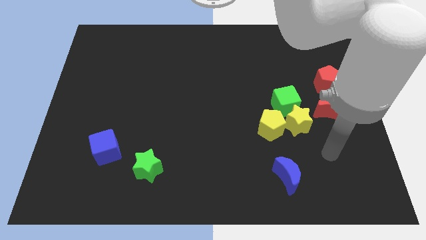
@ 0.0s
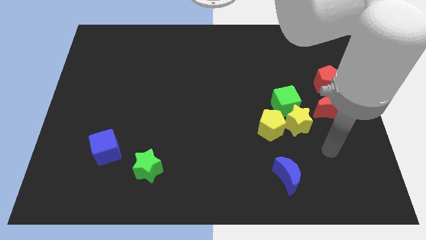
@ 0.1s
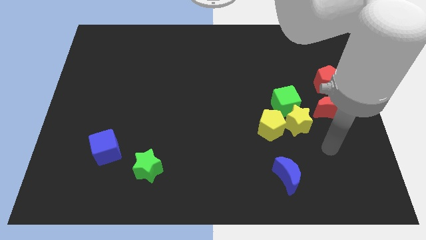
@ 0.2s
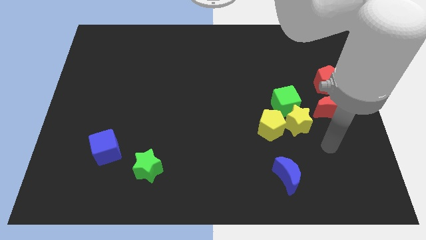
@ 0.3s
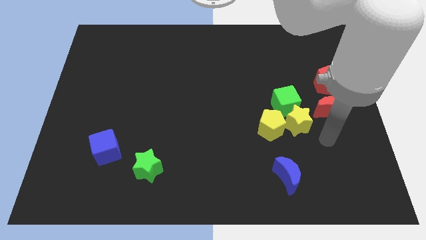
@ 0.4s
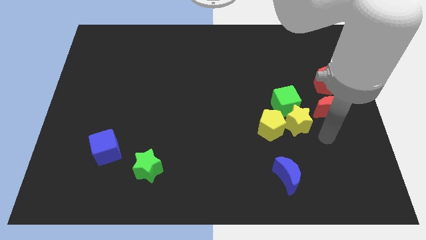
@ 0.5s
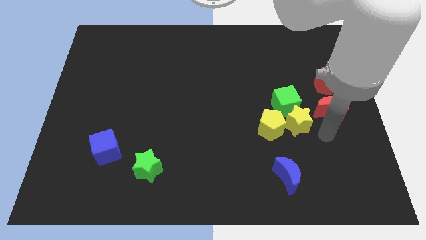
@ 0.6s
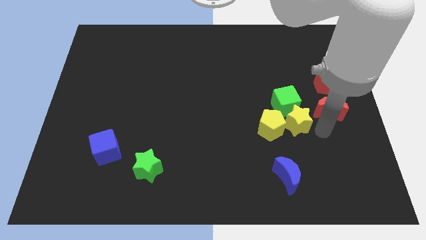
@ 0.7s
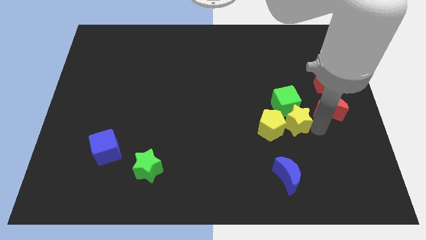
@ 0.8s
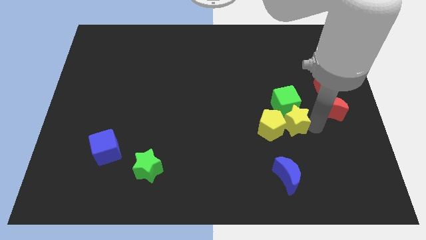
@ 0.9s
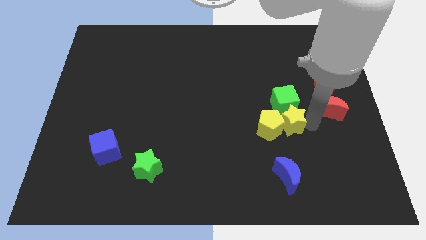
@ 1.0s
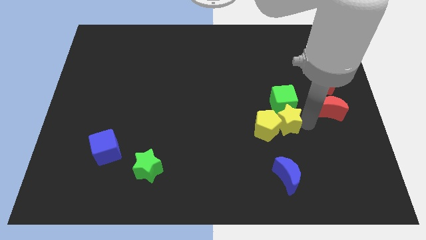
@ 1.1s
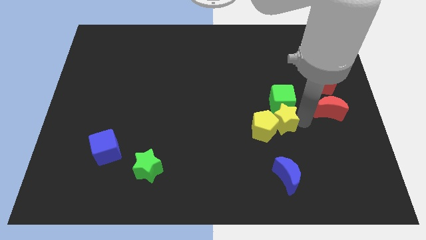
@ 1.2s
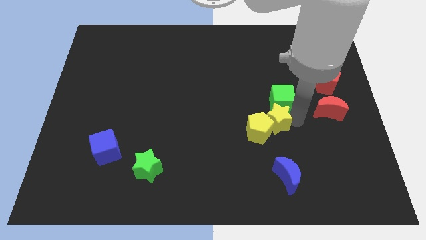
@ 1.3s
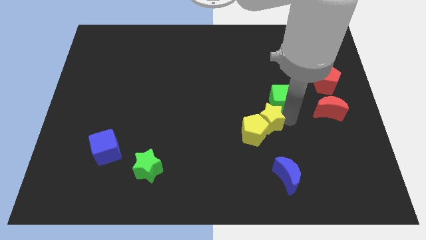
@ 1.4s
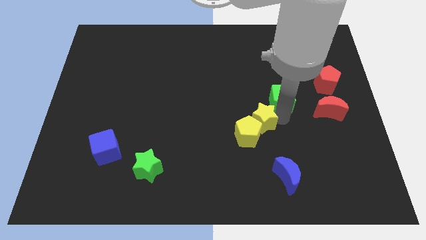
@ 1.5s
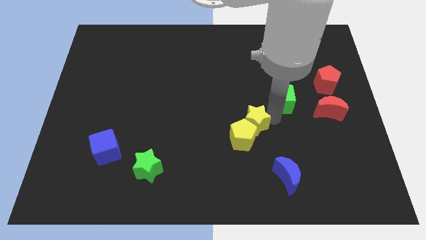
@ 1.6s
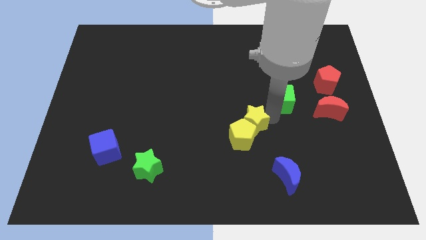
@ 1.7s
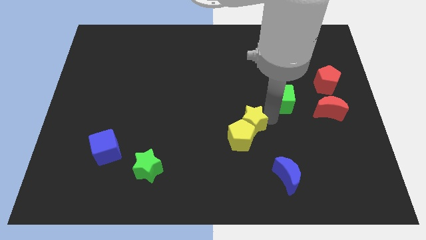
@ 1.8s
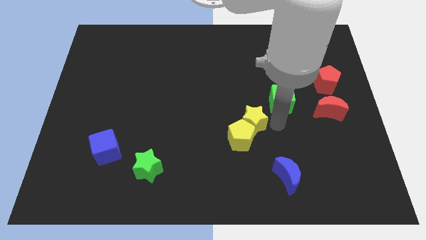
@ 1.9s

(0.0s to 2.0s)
move yellow blocks slightly left

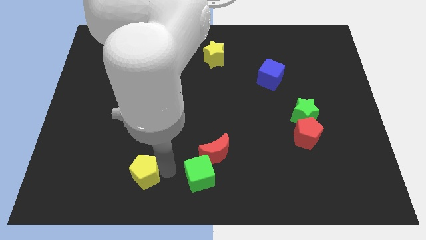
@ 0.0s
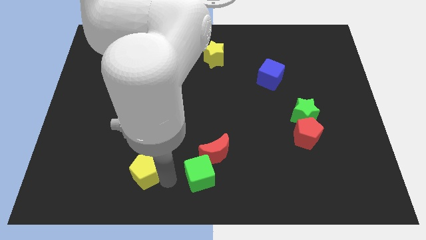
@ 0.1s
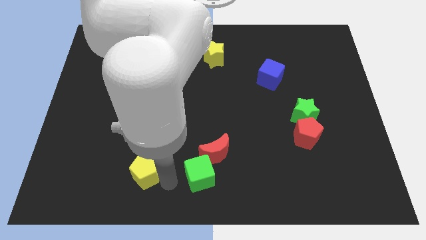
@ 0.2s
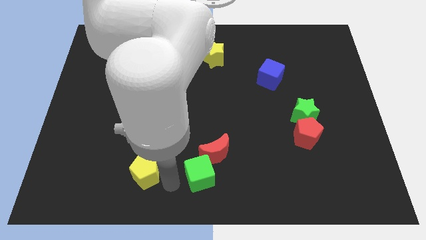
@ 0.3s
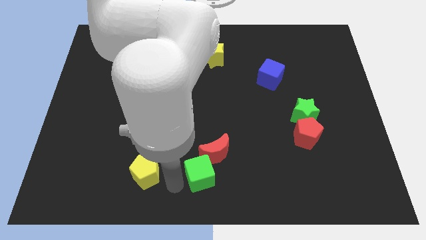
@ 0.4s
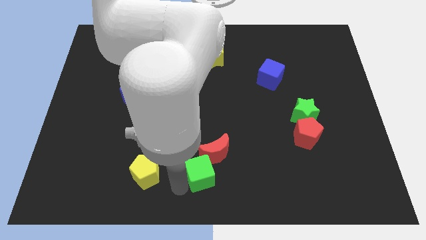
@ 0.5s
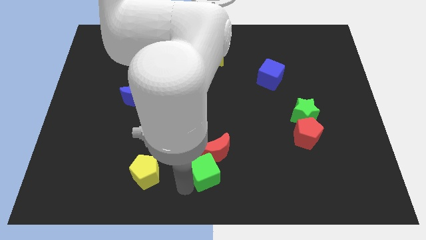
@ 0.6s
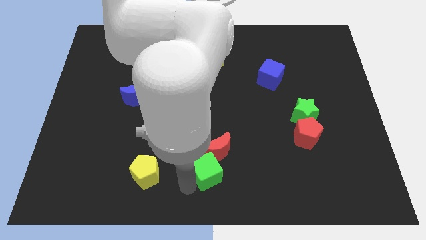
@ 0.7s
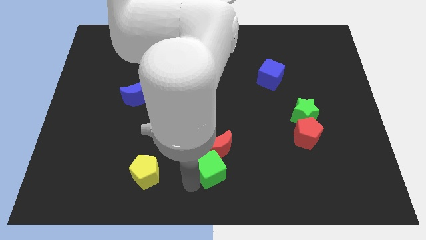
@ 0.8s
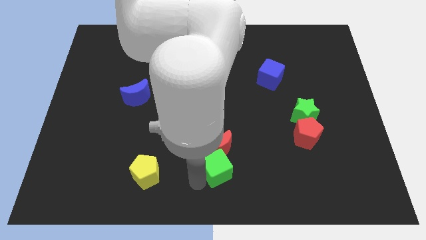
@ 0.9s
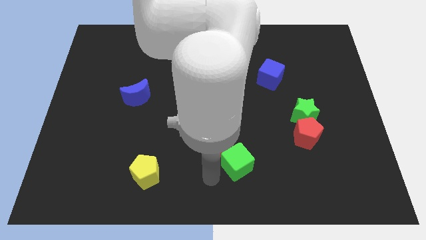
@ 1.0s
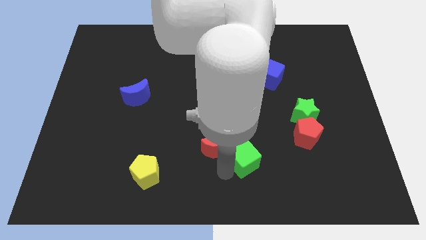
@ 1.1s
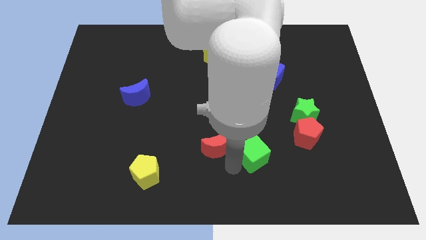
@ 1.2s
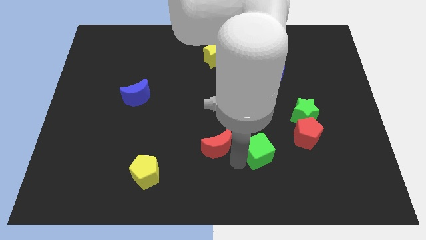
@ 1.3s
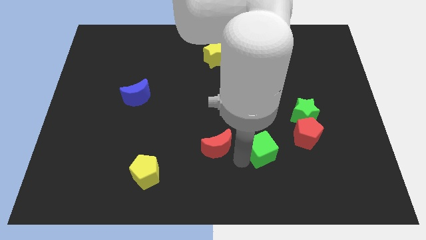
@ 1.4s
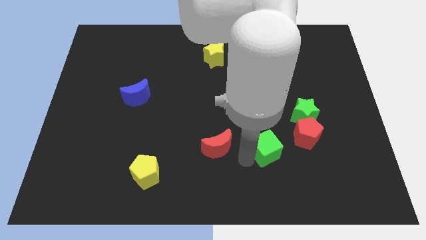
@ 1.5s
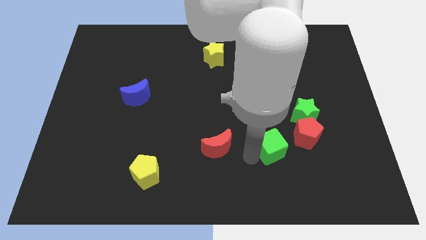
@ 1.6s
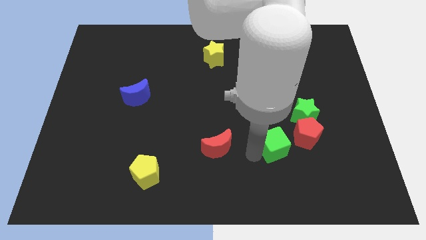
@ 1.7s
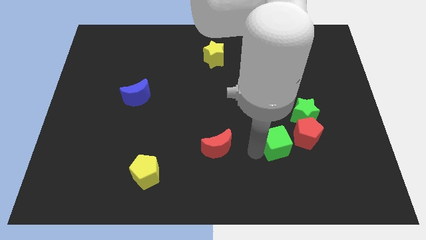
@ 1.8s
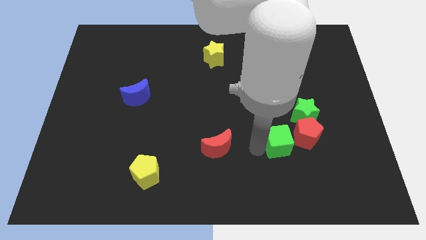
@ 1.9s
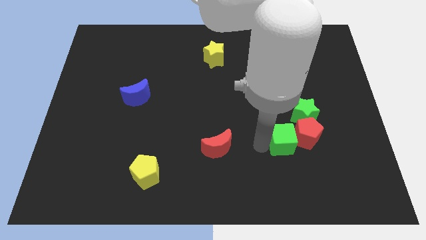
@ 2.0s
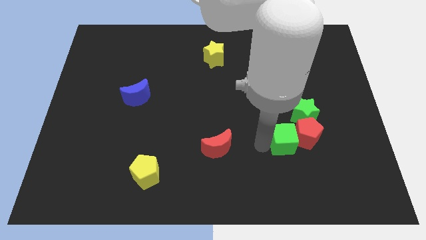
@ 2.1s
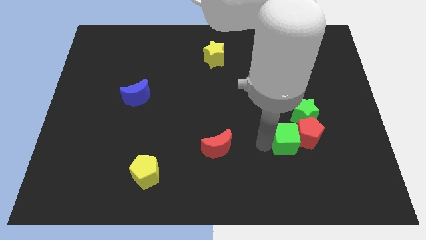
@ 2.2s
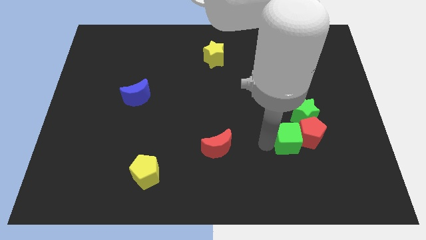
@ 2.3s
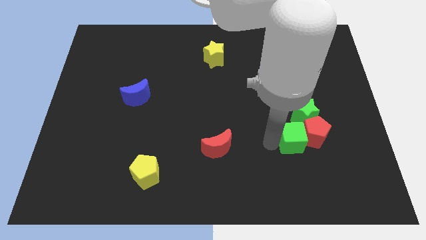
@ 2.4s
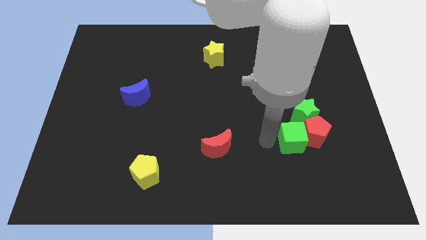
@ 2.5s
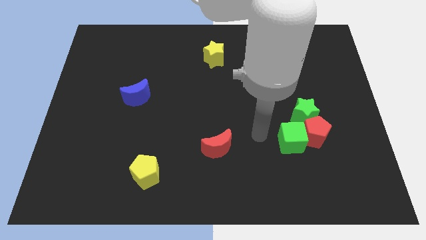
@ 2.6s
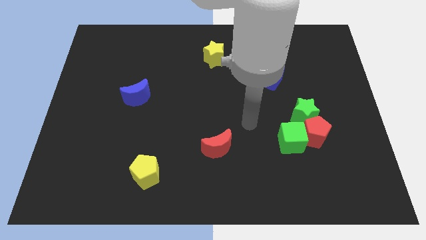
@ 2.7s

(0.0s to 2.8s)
push the green cube into the red pentagon

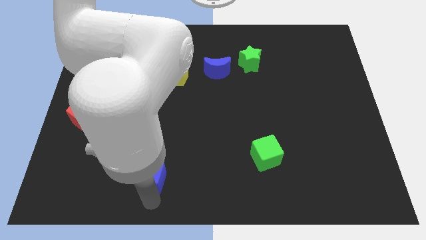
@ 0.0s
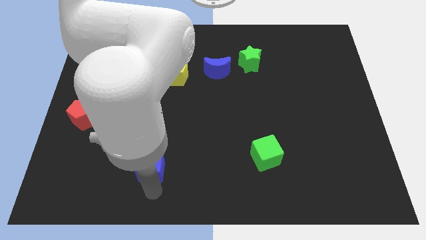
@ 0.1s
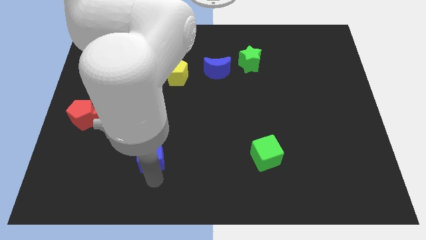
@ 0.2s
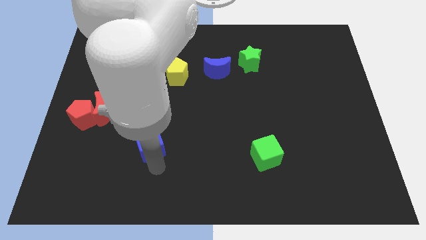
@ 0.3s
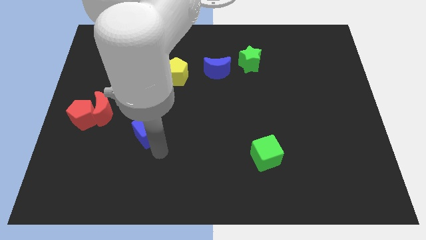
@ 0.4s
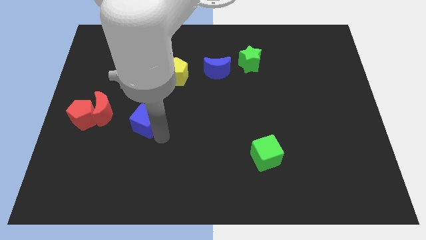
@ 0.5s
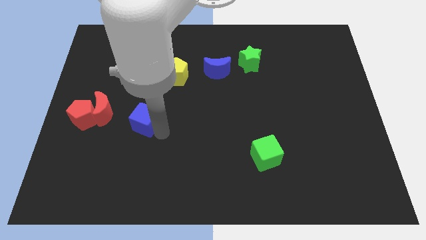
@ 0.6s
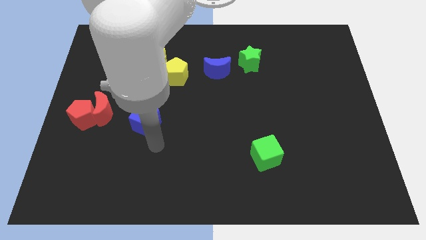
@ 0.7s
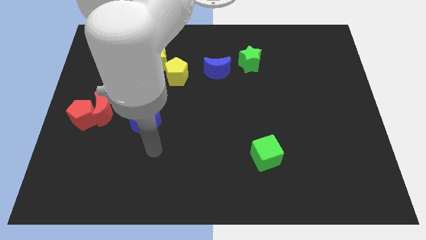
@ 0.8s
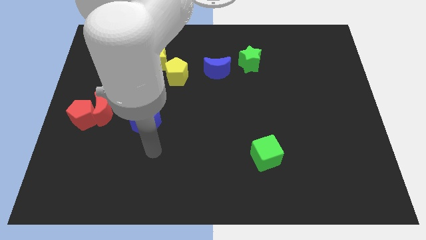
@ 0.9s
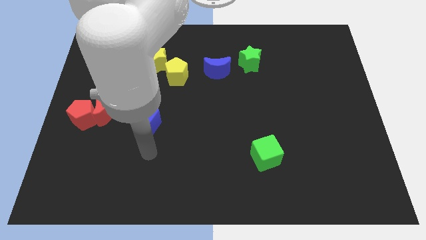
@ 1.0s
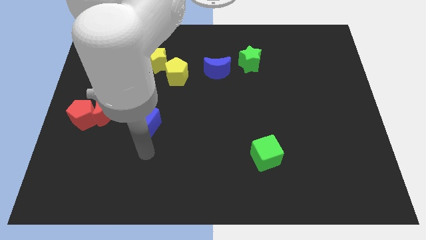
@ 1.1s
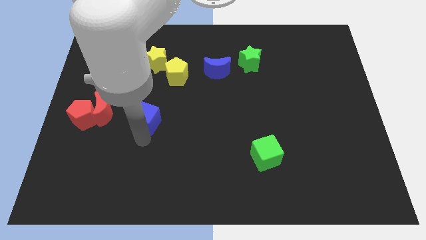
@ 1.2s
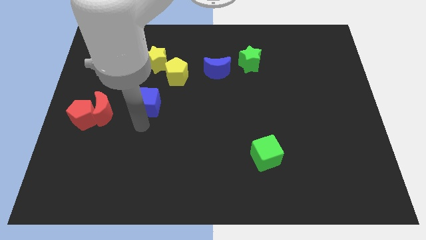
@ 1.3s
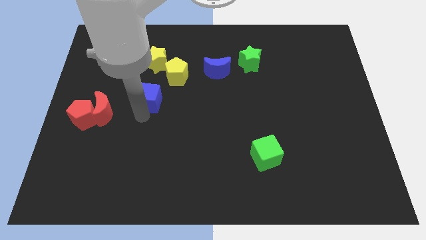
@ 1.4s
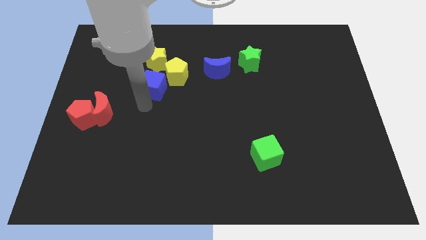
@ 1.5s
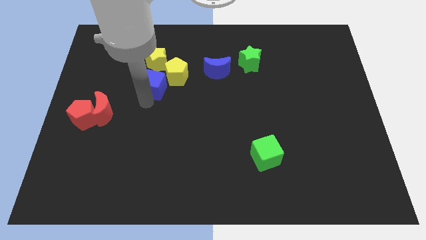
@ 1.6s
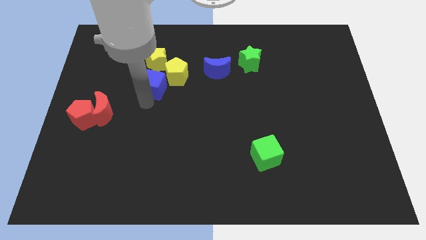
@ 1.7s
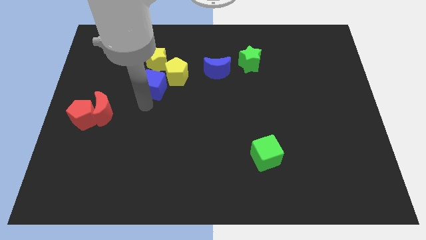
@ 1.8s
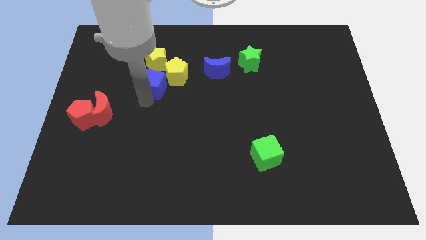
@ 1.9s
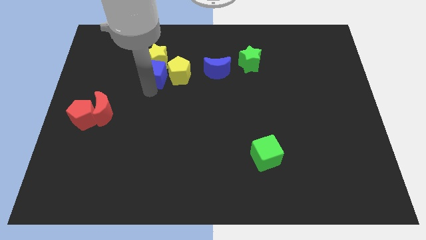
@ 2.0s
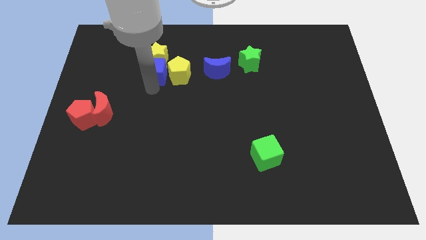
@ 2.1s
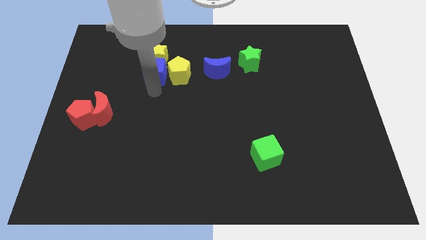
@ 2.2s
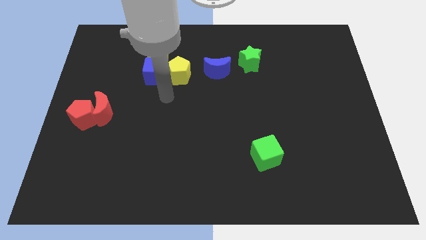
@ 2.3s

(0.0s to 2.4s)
push the blue cube into the below of the yellow star

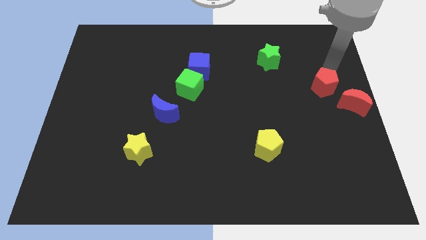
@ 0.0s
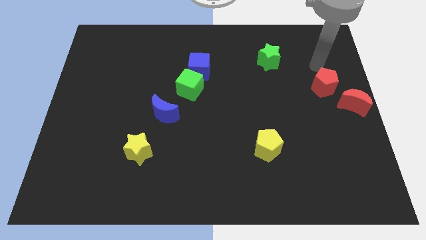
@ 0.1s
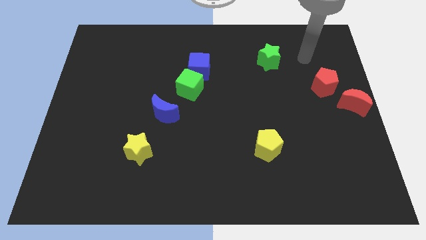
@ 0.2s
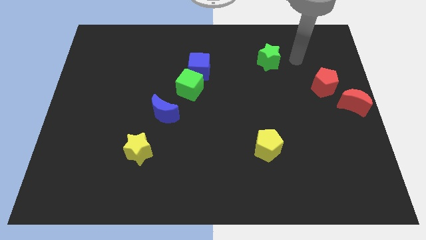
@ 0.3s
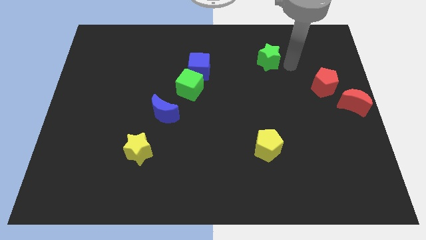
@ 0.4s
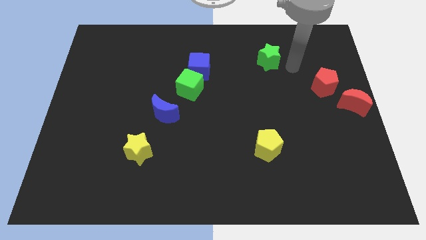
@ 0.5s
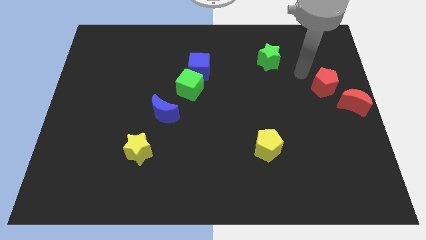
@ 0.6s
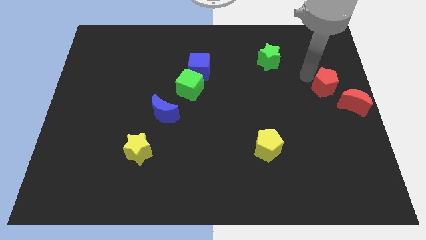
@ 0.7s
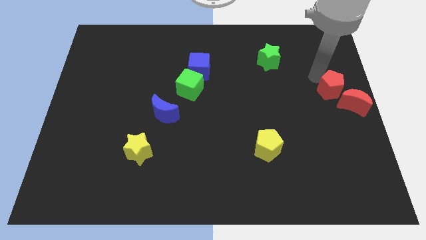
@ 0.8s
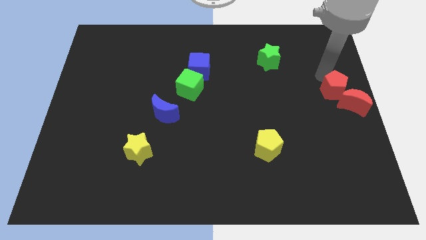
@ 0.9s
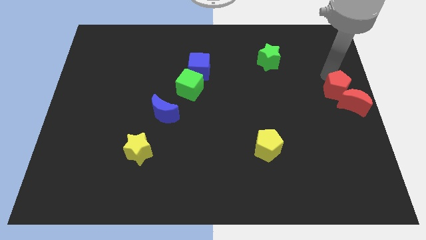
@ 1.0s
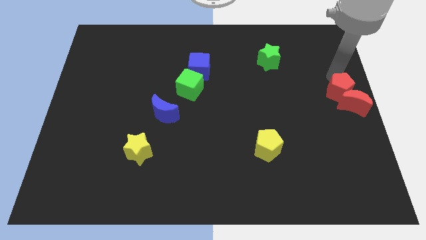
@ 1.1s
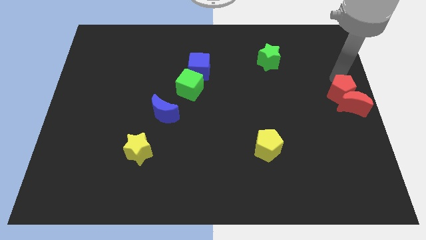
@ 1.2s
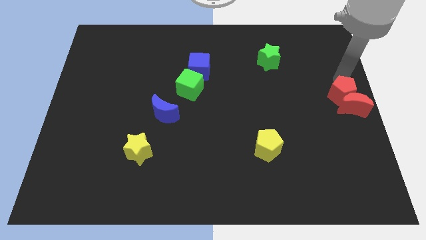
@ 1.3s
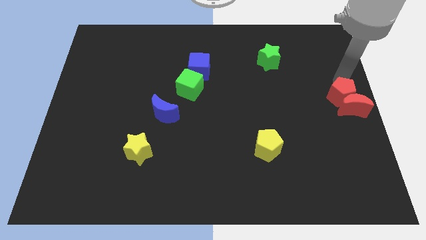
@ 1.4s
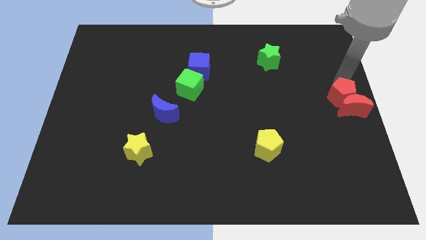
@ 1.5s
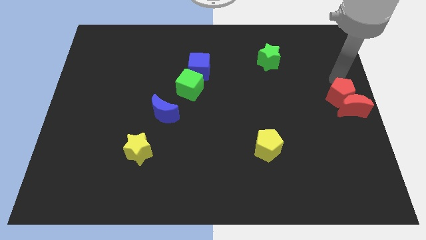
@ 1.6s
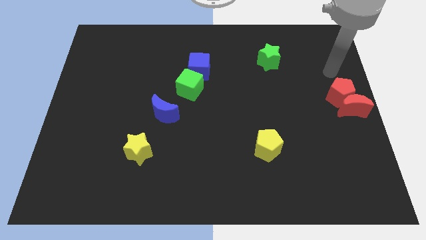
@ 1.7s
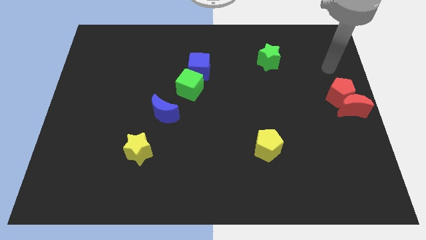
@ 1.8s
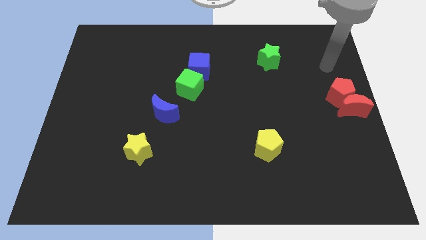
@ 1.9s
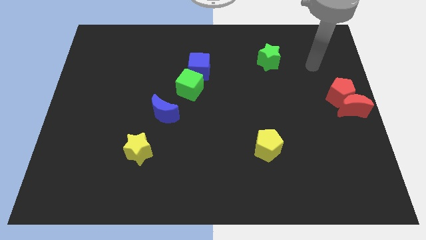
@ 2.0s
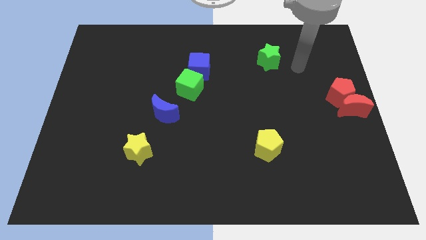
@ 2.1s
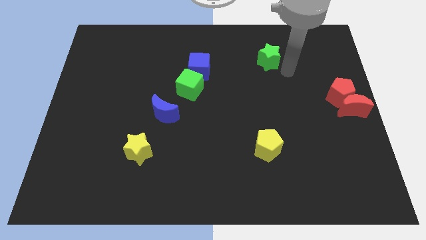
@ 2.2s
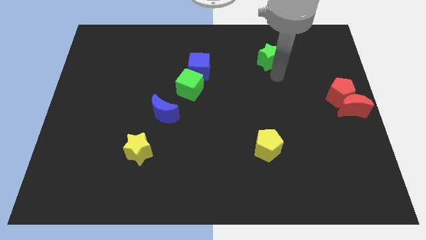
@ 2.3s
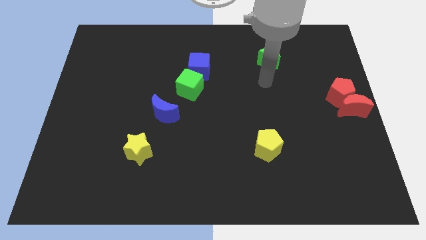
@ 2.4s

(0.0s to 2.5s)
push the red blocks towards the center right corner of the board
